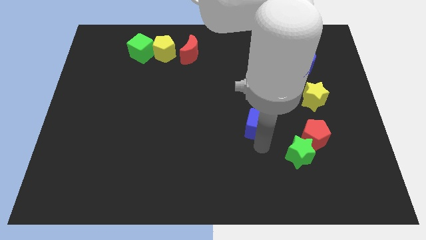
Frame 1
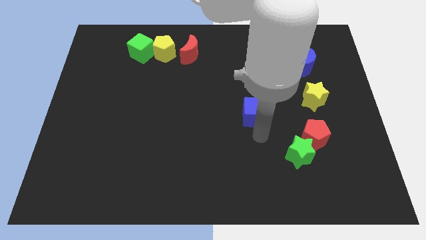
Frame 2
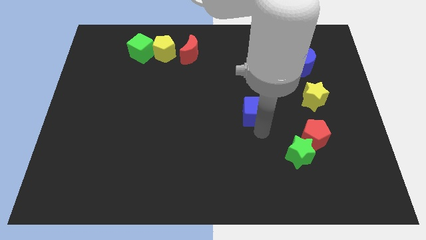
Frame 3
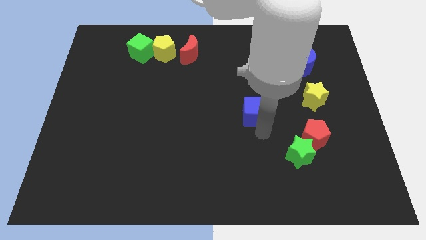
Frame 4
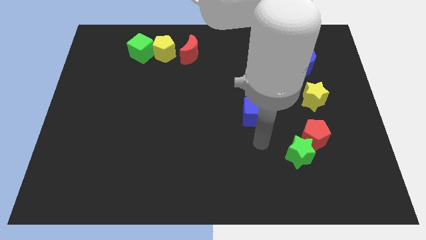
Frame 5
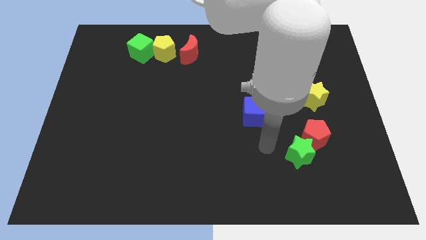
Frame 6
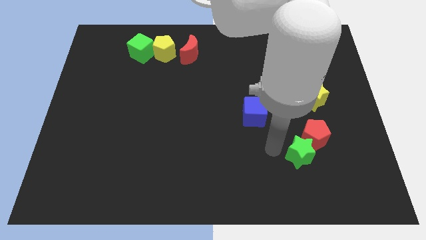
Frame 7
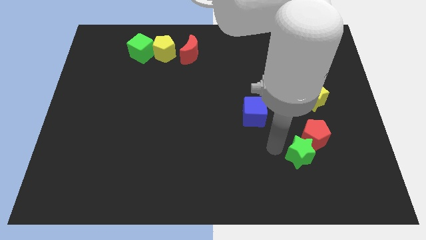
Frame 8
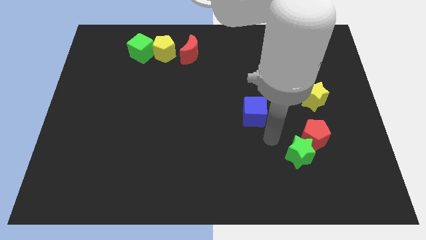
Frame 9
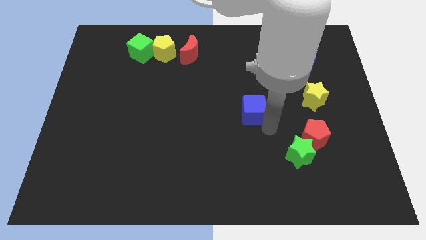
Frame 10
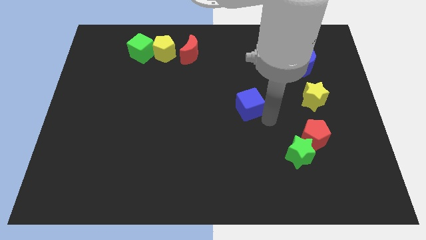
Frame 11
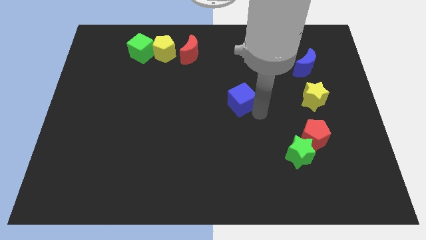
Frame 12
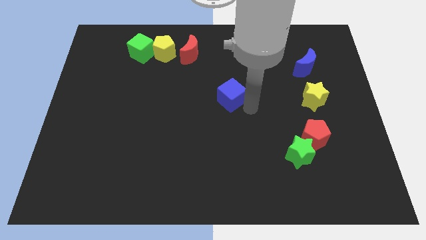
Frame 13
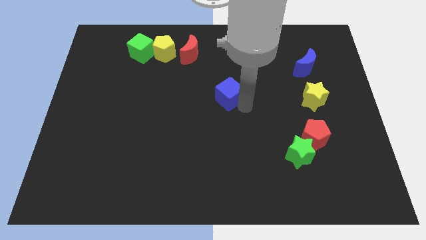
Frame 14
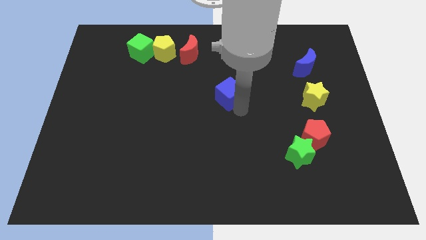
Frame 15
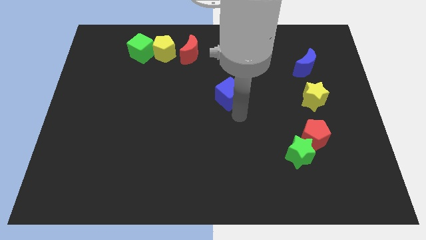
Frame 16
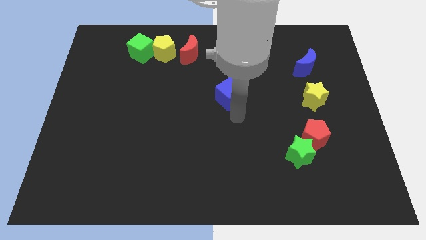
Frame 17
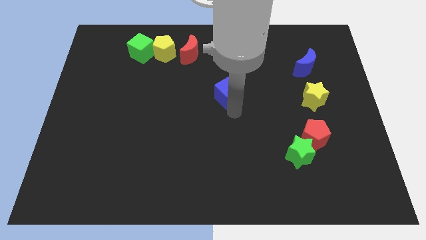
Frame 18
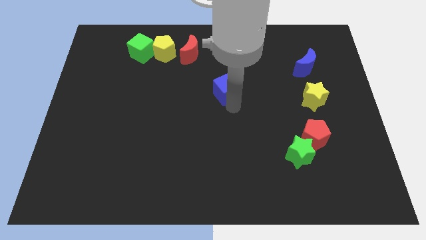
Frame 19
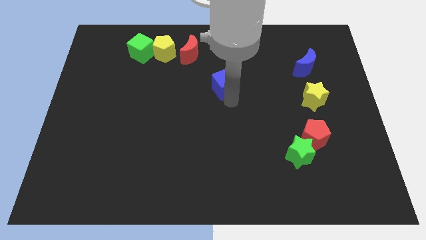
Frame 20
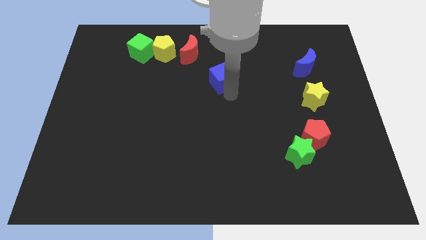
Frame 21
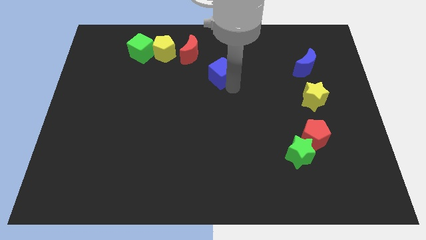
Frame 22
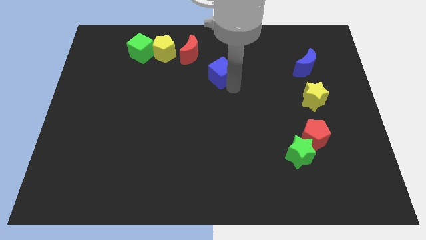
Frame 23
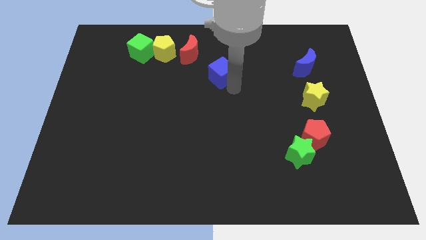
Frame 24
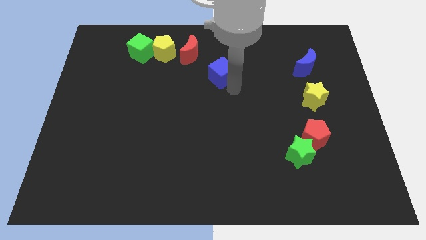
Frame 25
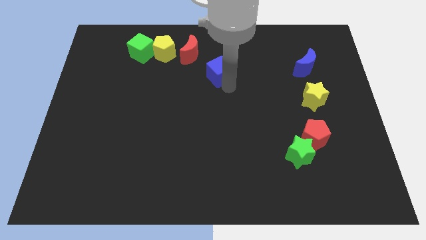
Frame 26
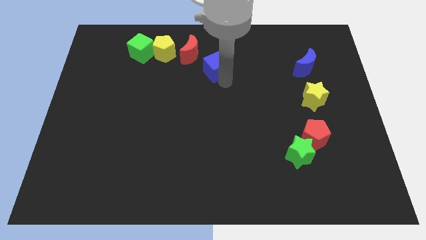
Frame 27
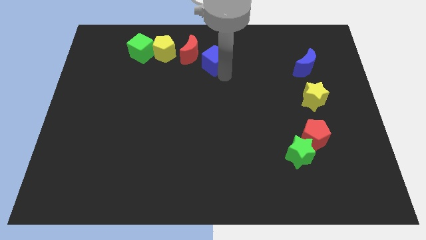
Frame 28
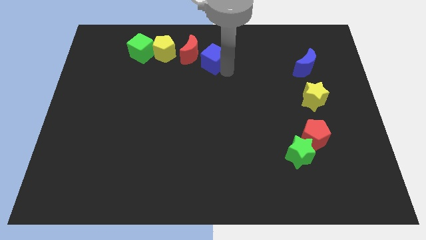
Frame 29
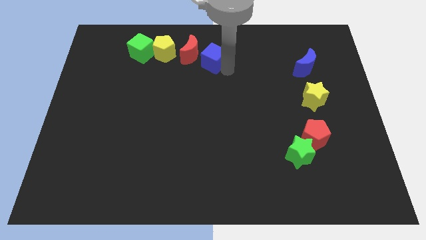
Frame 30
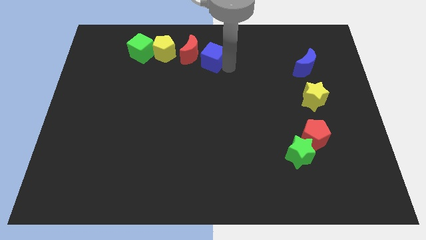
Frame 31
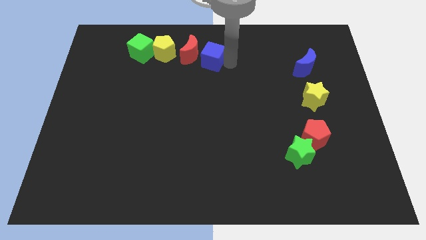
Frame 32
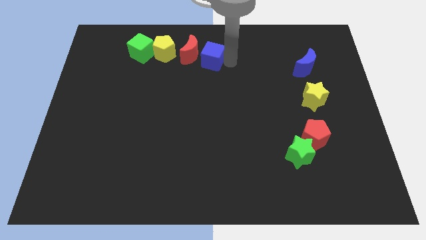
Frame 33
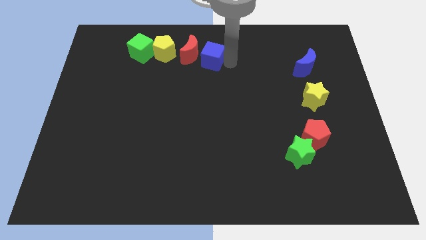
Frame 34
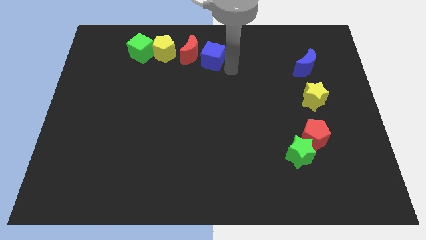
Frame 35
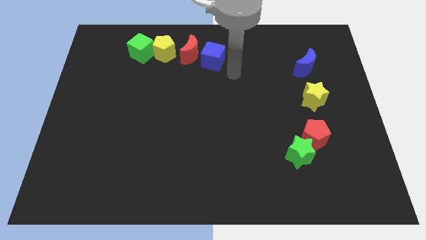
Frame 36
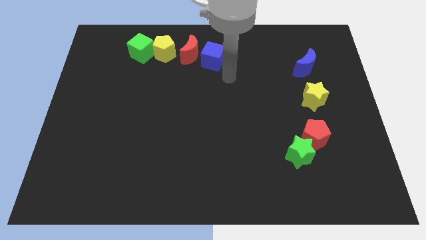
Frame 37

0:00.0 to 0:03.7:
place the blue cube to the right of the red crescent

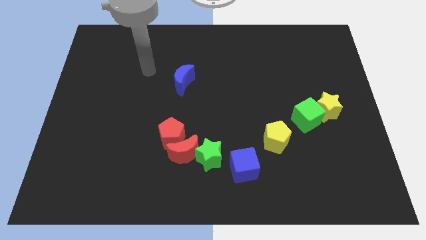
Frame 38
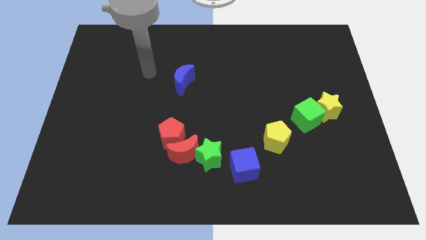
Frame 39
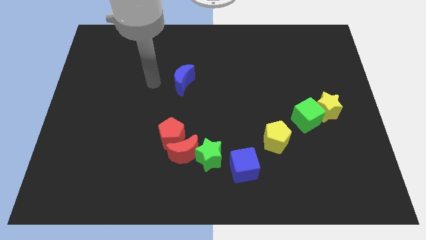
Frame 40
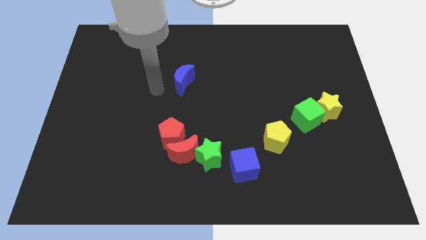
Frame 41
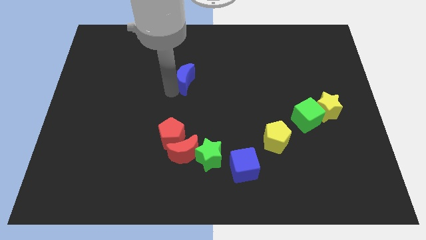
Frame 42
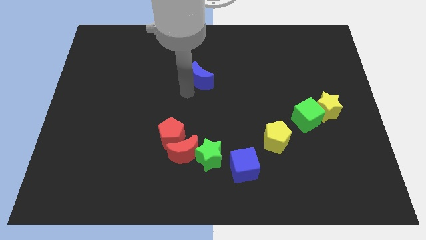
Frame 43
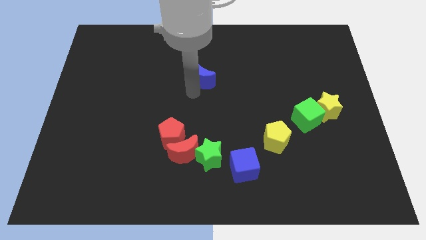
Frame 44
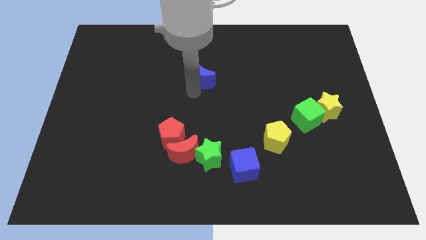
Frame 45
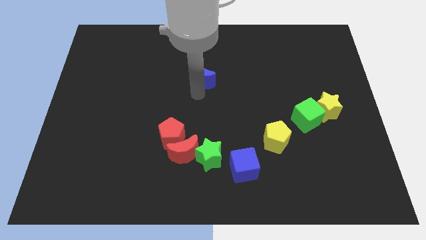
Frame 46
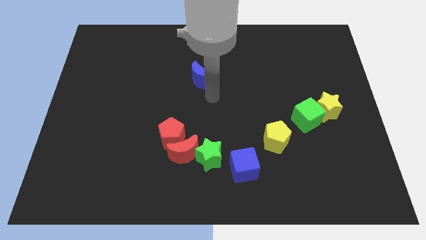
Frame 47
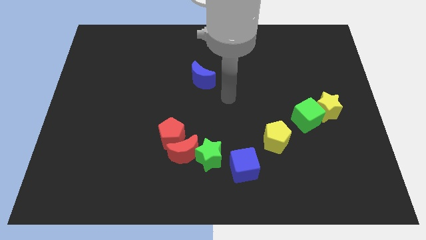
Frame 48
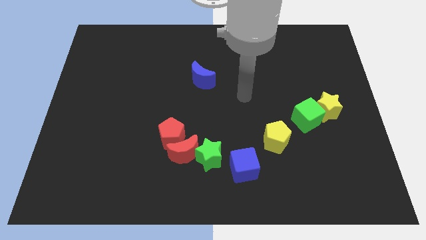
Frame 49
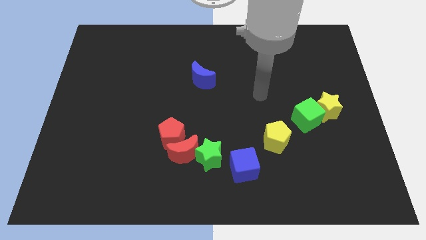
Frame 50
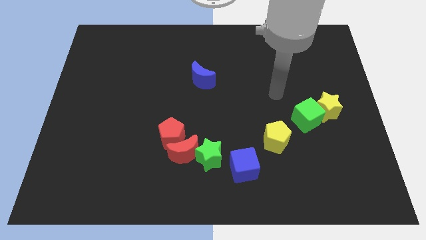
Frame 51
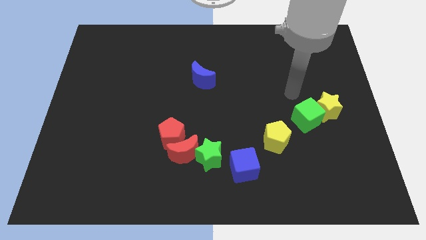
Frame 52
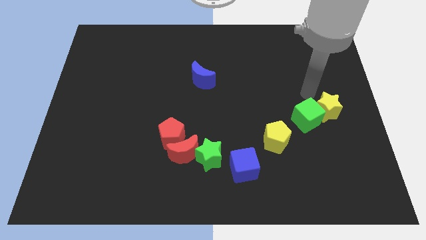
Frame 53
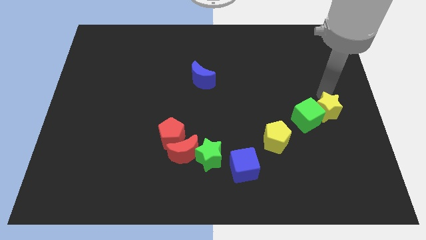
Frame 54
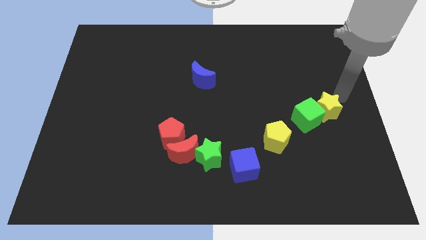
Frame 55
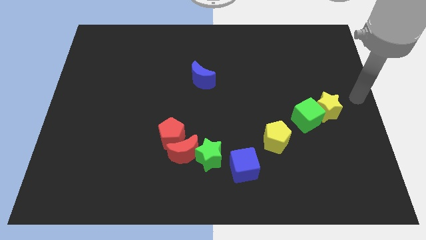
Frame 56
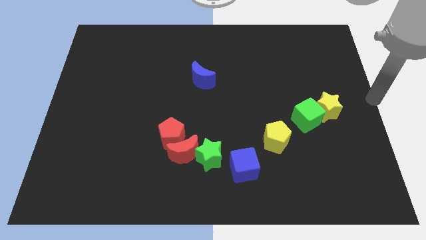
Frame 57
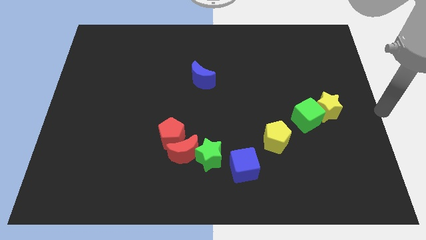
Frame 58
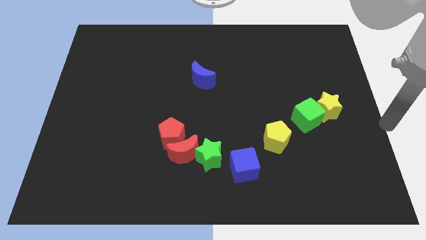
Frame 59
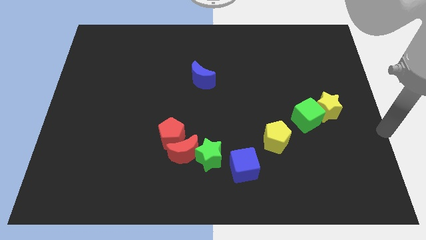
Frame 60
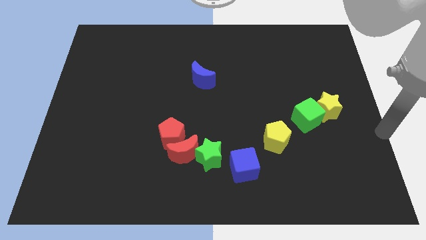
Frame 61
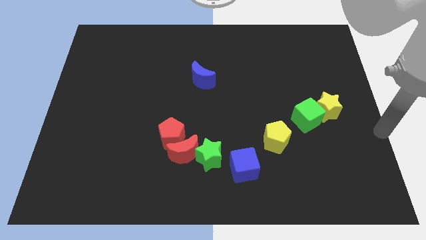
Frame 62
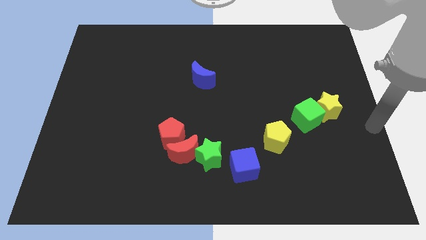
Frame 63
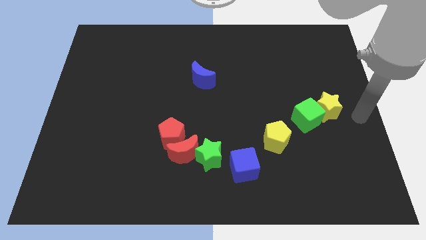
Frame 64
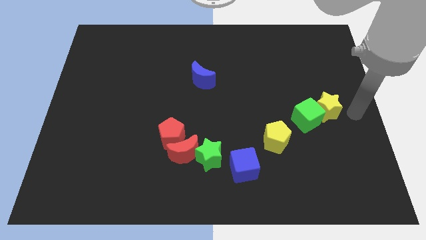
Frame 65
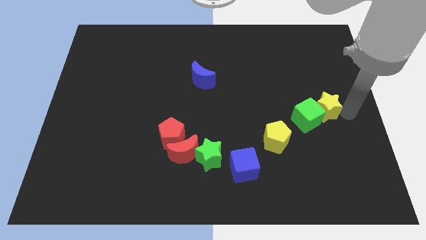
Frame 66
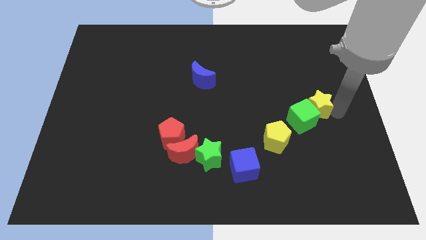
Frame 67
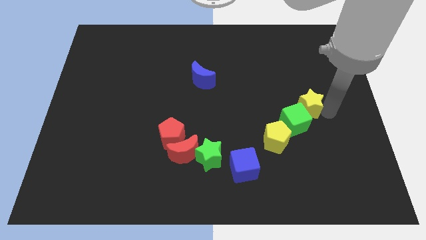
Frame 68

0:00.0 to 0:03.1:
push the green star slightly to the left

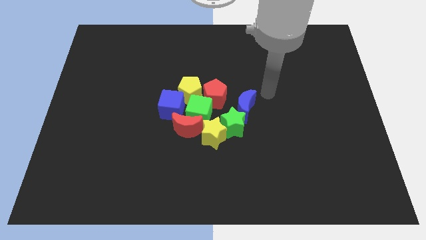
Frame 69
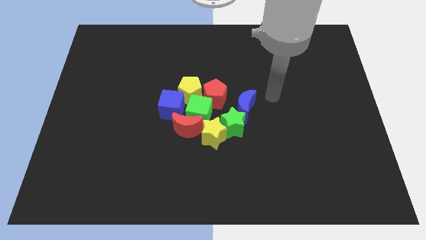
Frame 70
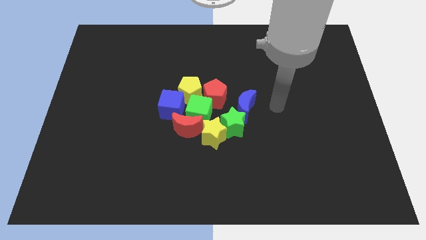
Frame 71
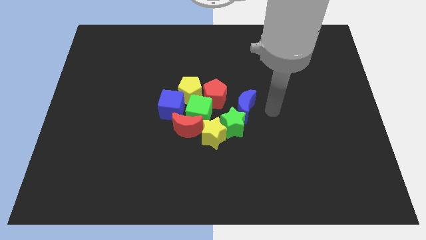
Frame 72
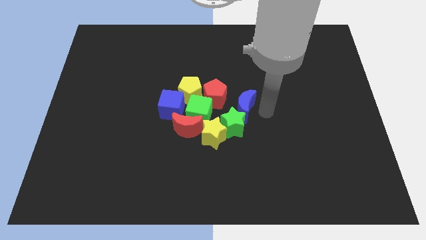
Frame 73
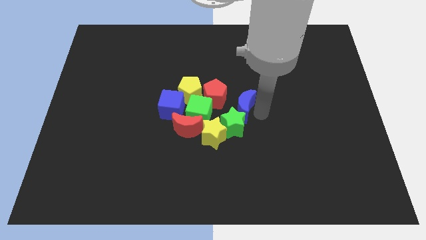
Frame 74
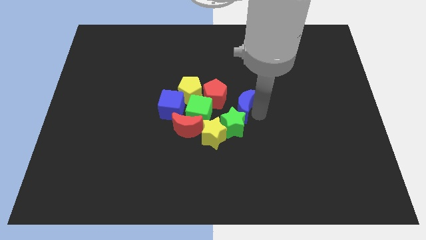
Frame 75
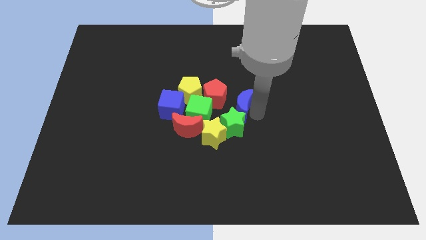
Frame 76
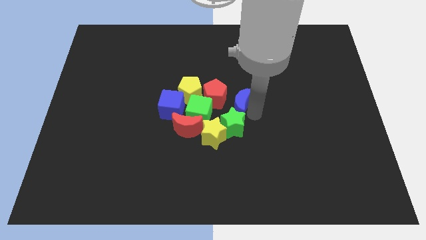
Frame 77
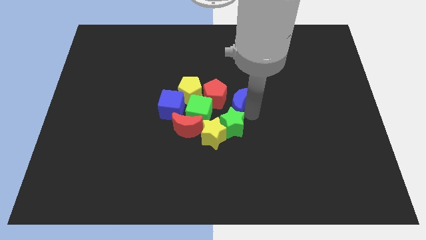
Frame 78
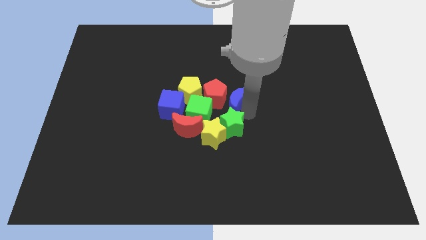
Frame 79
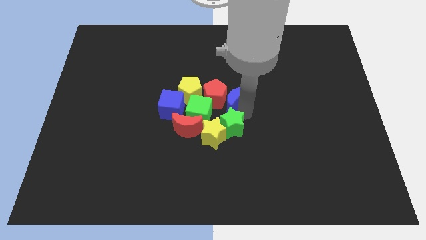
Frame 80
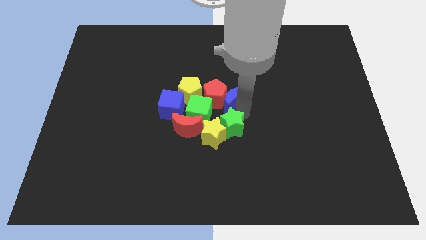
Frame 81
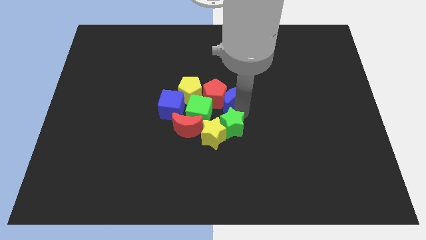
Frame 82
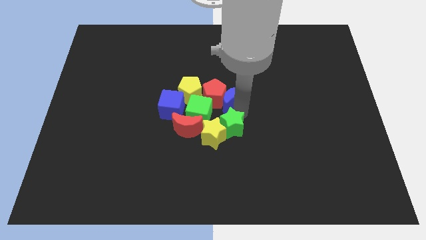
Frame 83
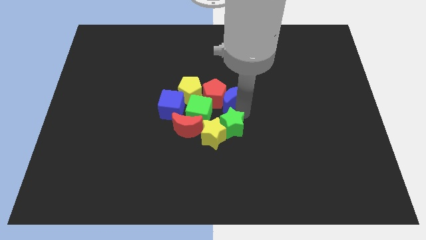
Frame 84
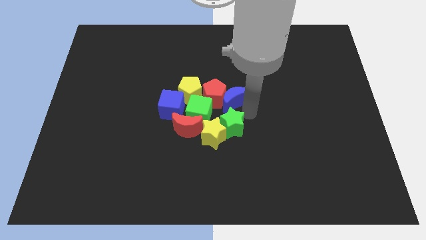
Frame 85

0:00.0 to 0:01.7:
push blue crescent into red pentagon

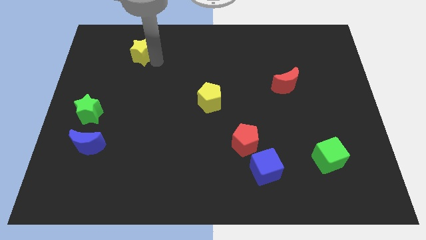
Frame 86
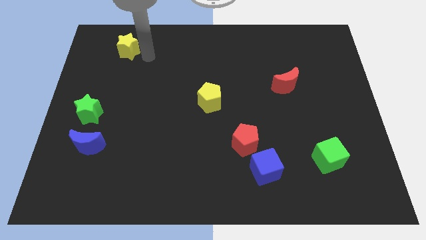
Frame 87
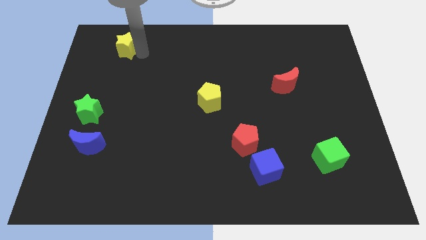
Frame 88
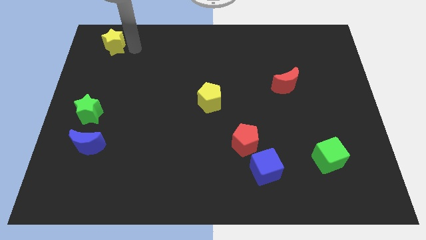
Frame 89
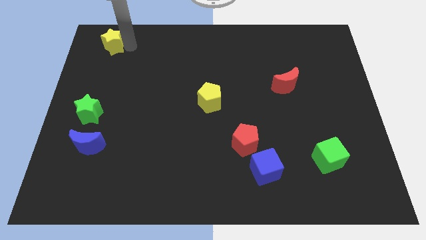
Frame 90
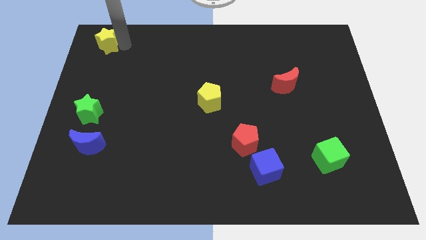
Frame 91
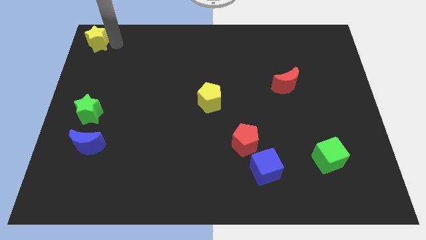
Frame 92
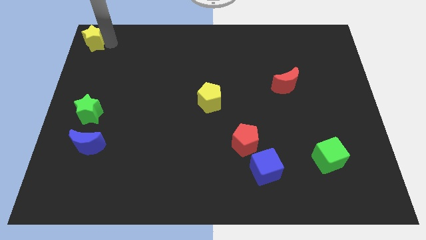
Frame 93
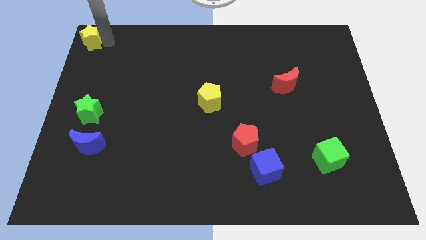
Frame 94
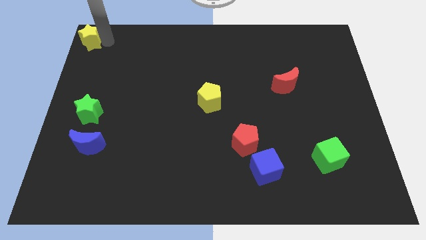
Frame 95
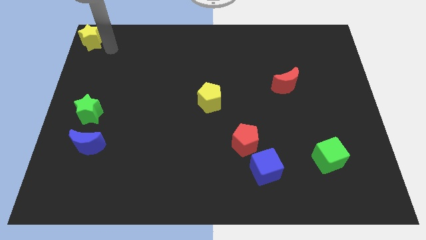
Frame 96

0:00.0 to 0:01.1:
drag the yellow star towards the top left of the board
